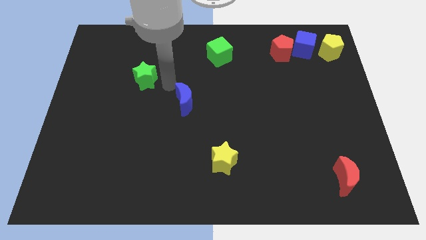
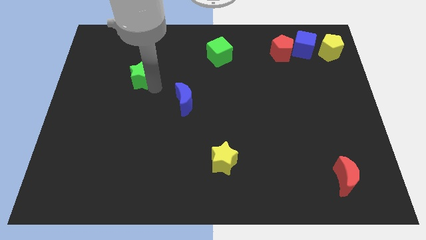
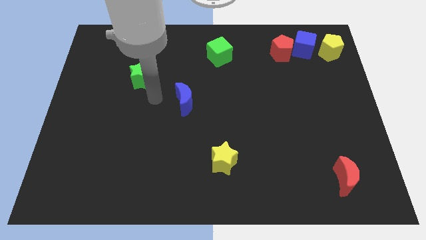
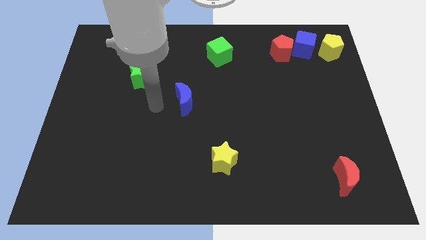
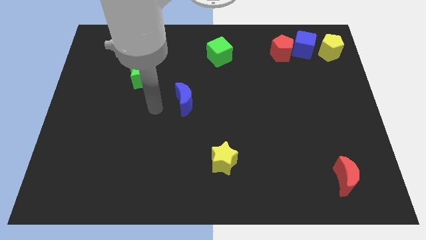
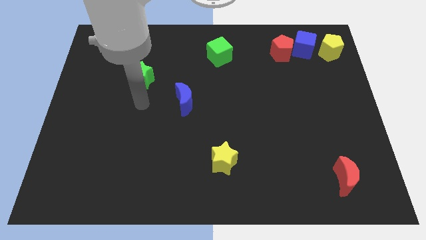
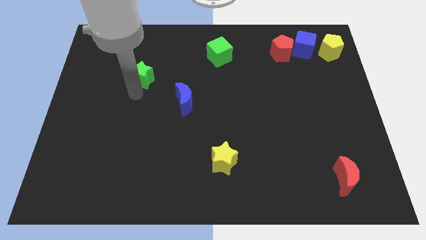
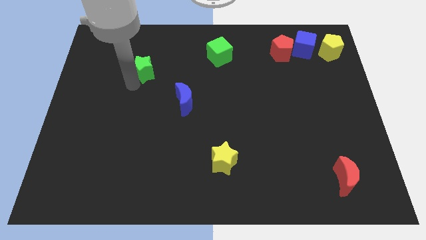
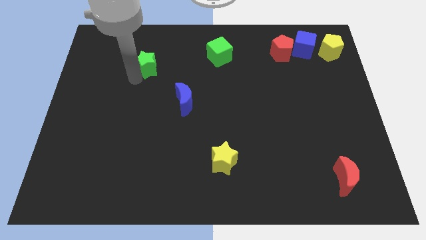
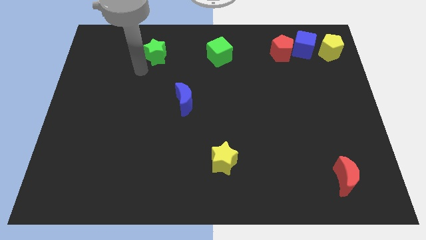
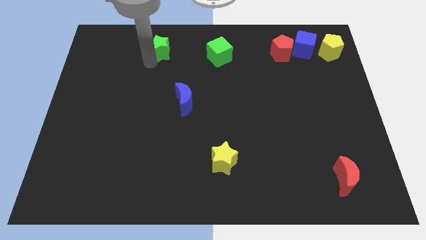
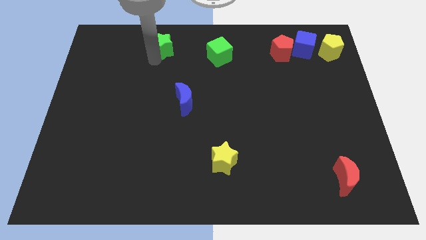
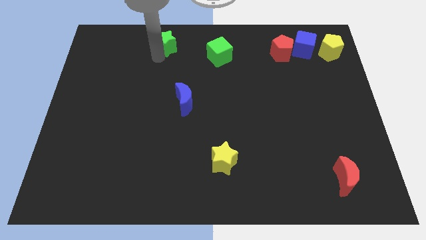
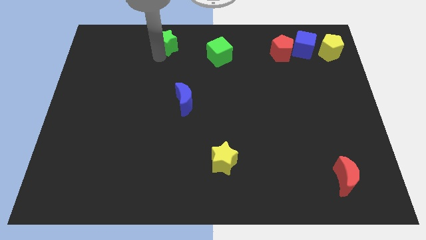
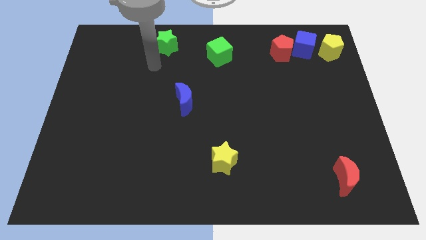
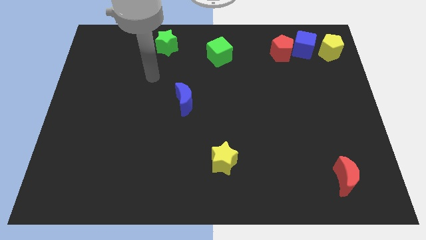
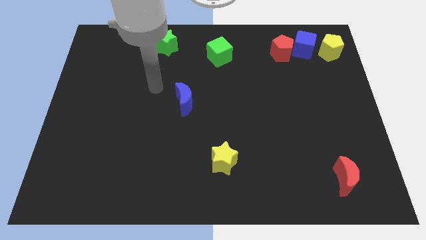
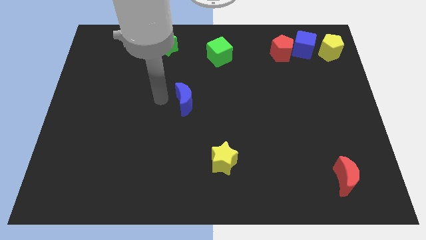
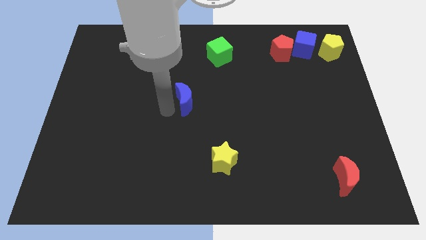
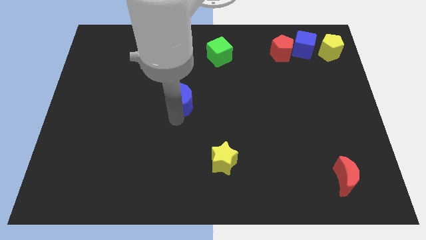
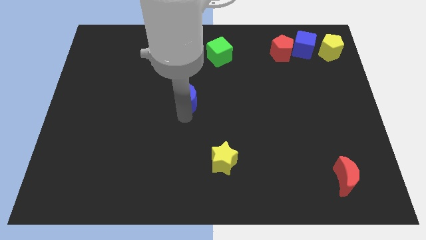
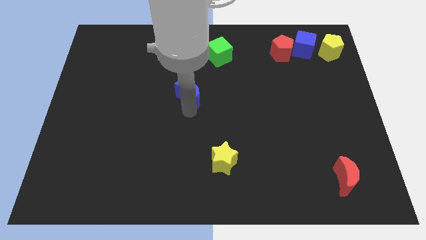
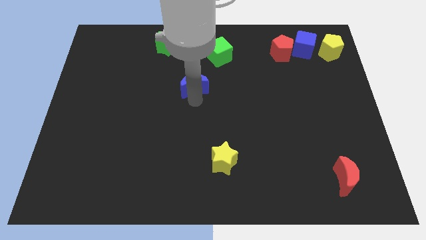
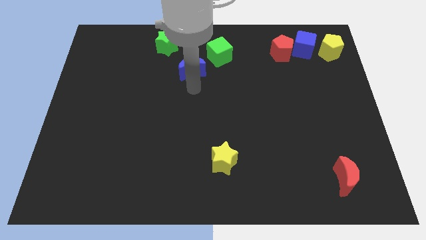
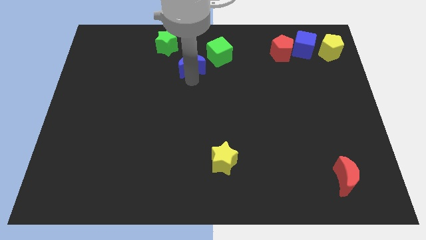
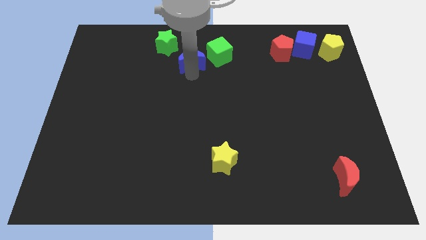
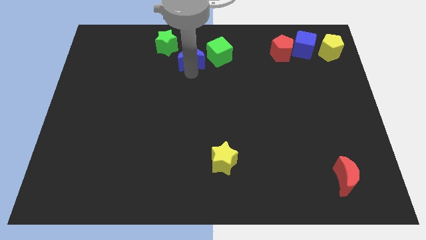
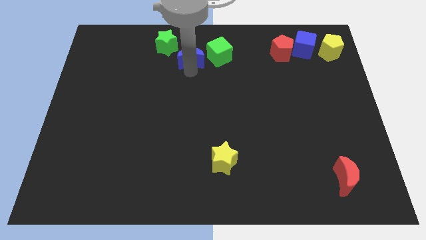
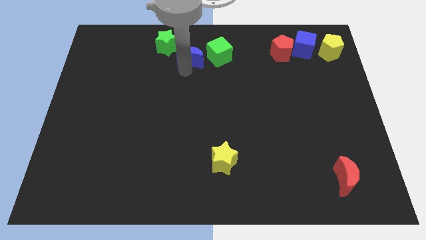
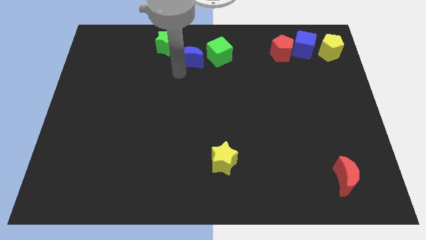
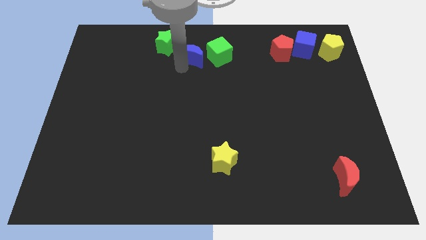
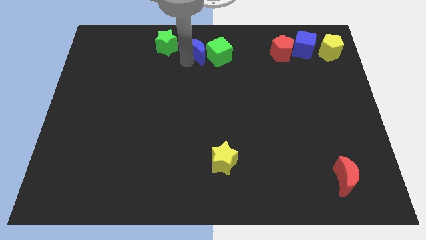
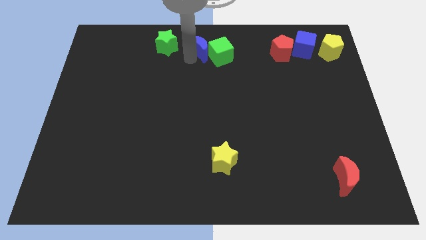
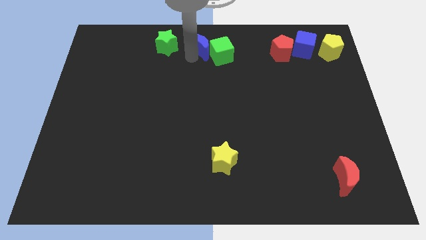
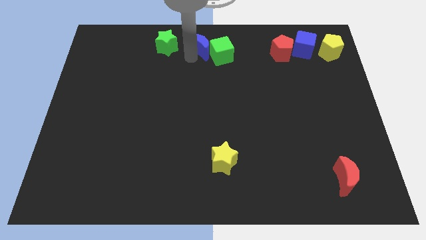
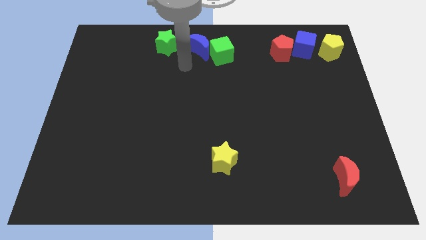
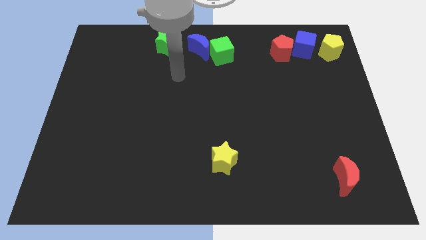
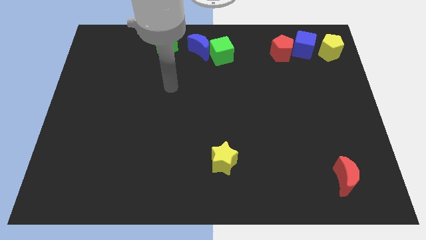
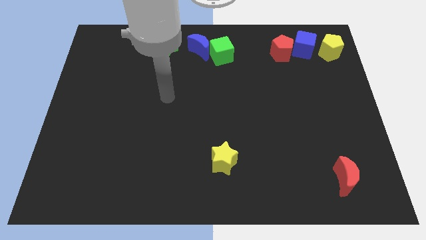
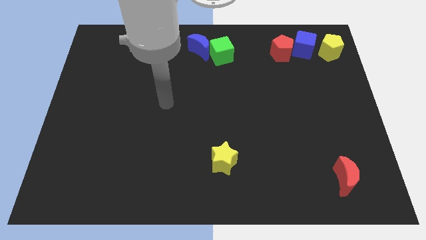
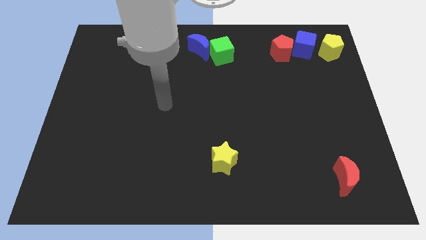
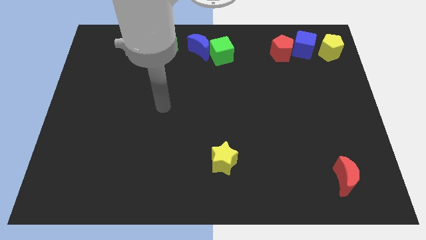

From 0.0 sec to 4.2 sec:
place the blue crescent and the green star in a horizontal line with green cube

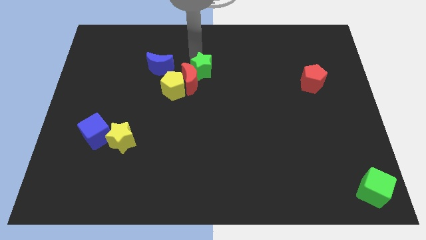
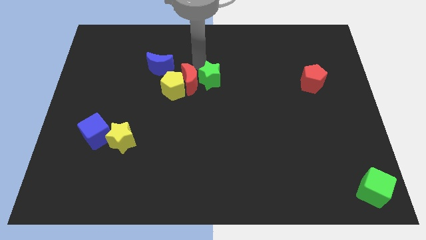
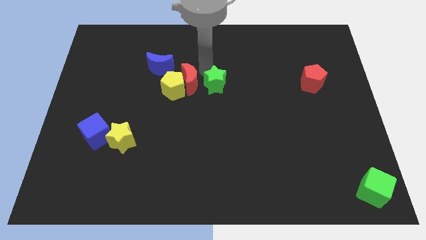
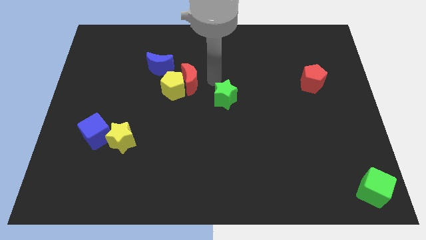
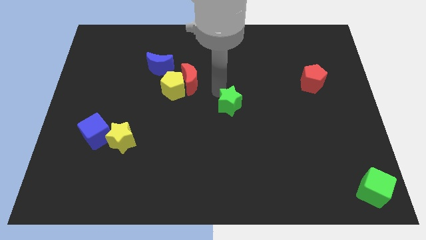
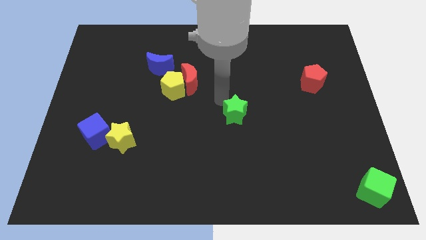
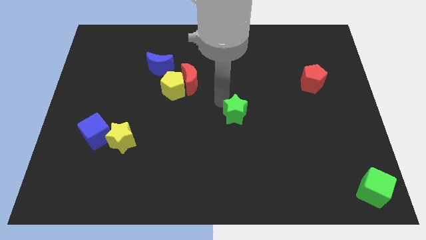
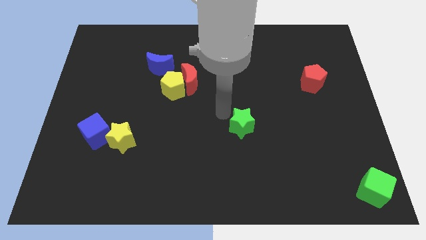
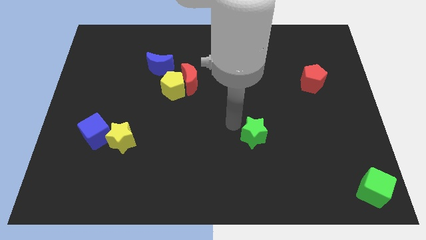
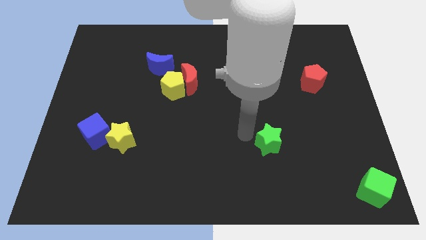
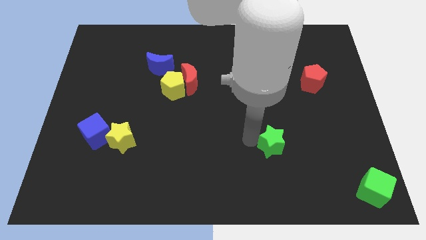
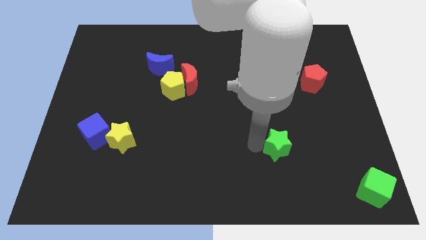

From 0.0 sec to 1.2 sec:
separate the green star from the red crescent

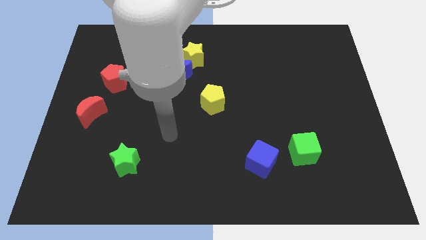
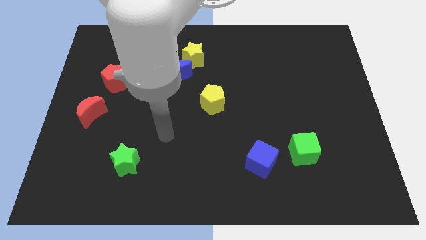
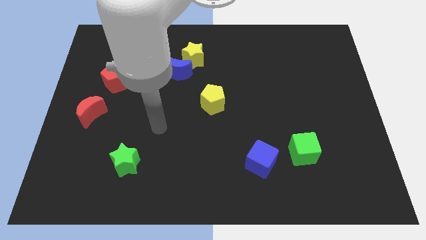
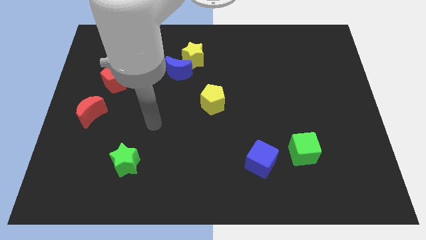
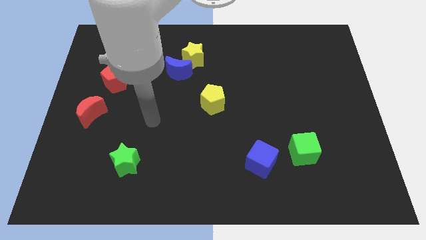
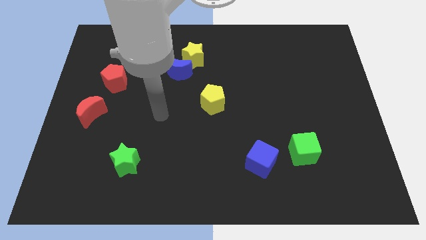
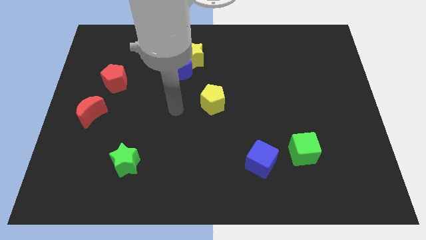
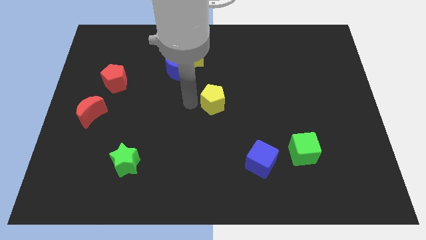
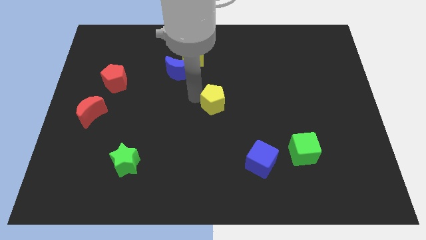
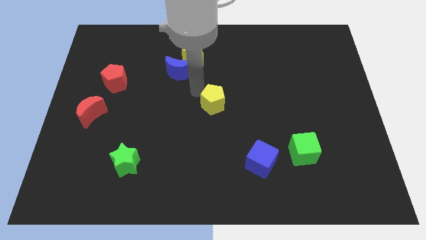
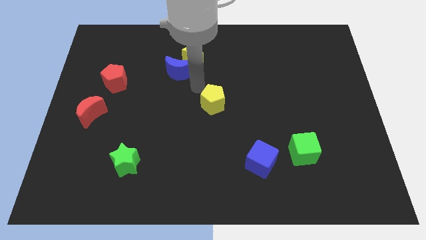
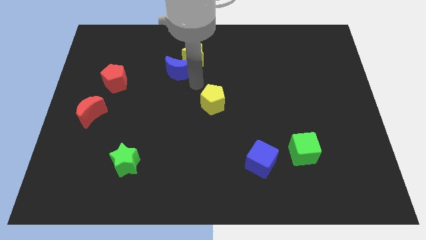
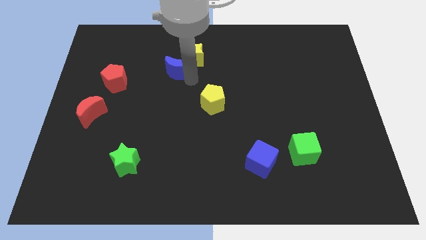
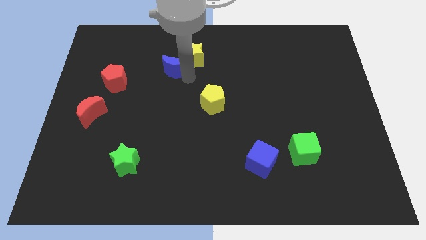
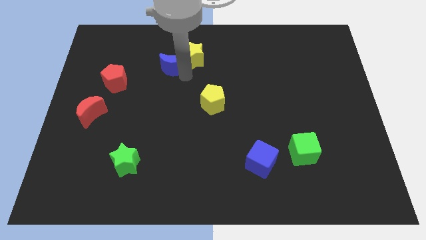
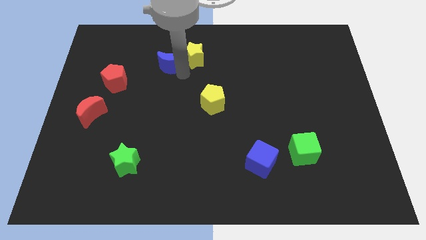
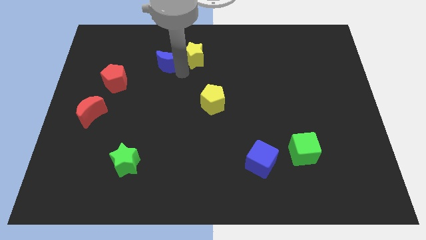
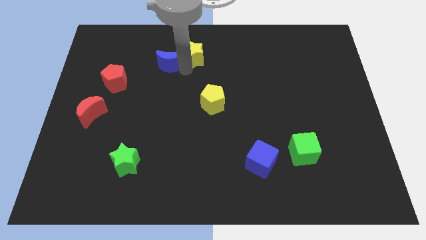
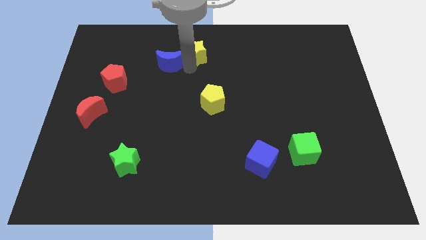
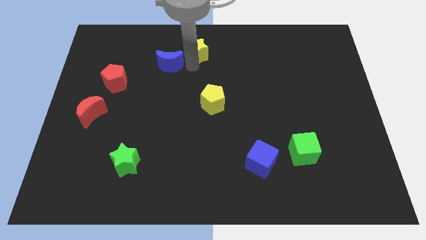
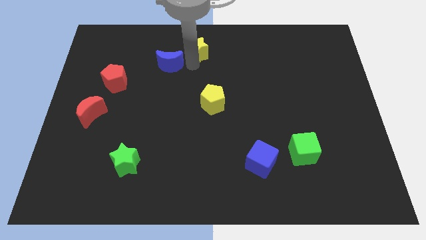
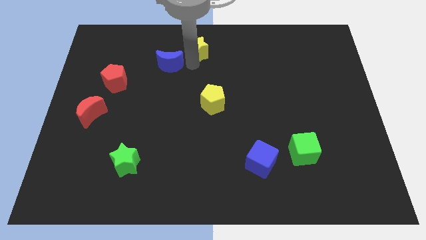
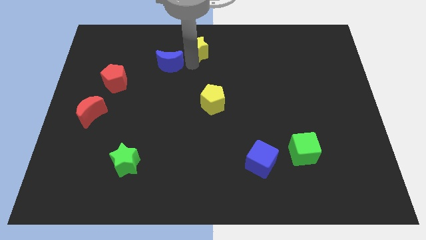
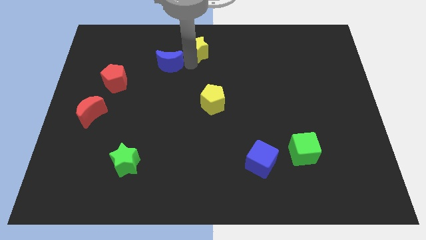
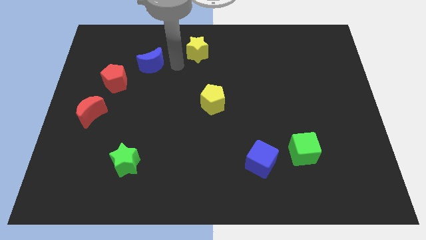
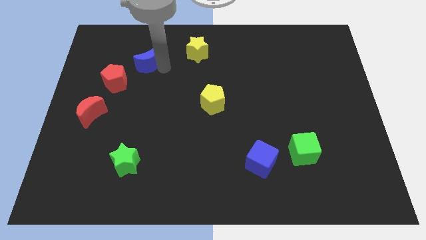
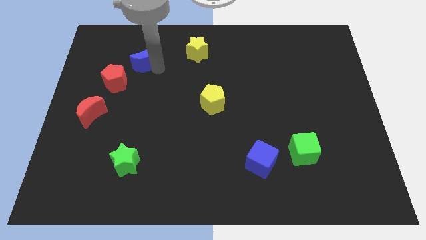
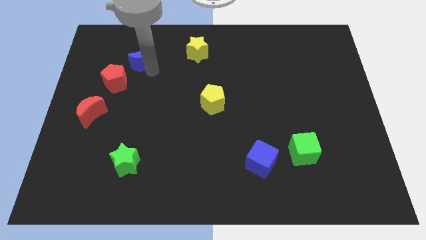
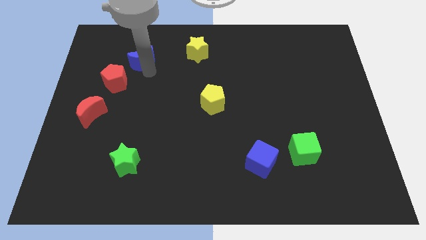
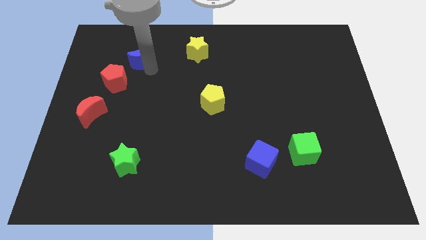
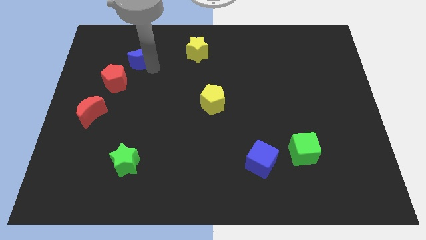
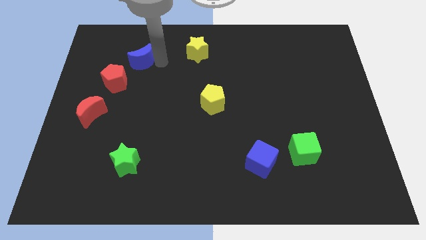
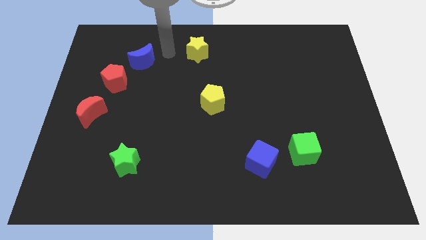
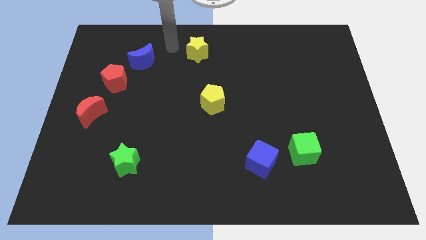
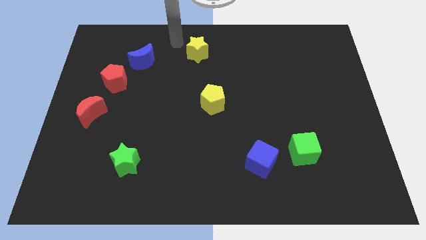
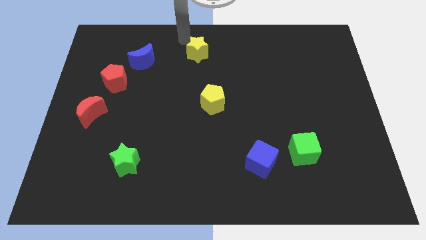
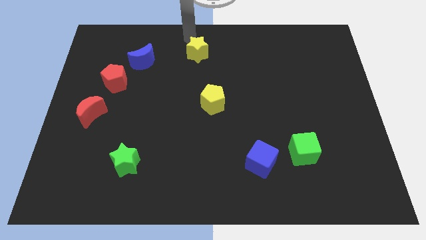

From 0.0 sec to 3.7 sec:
push the blue moon and yellow star in different directions
